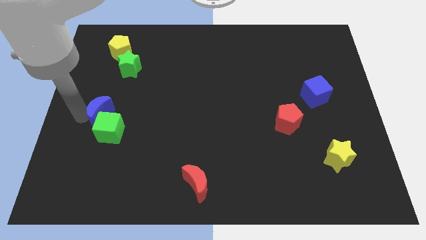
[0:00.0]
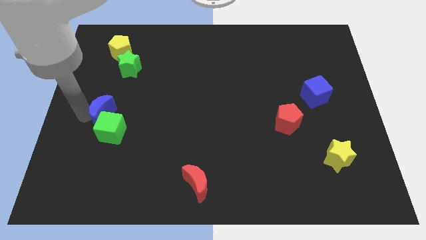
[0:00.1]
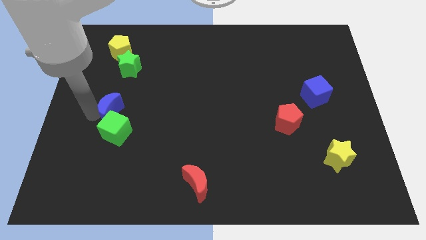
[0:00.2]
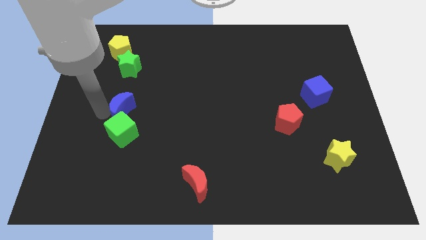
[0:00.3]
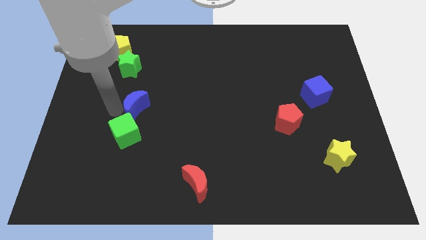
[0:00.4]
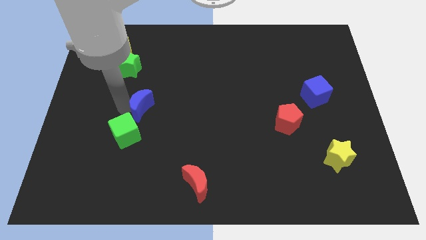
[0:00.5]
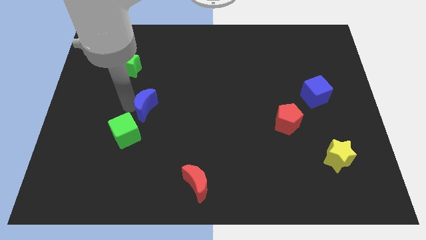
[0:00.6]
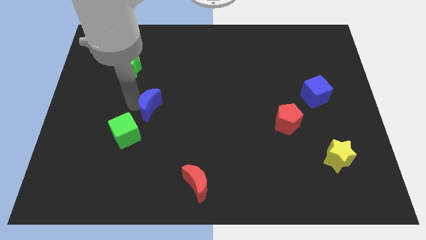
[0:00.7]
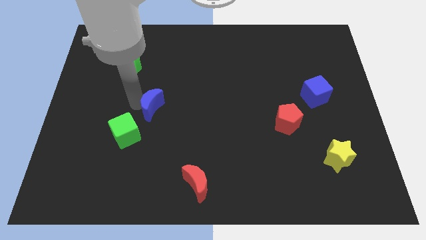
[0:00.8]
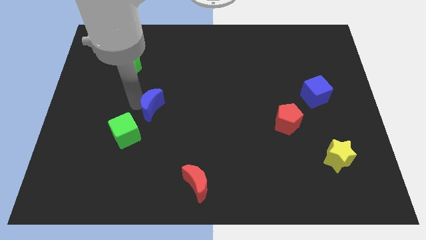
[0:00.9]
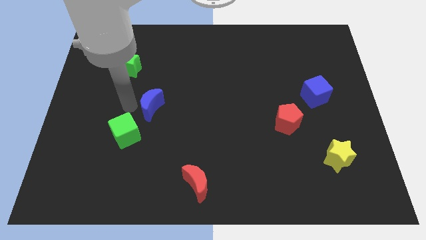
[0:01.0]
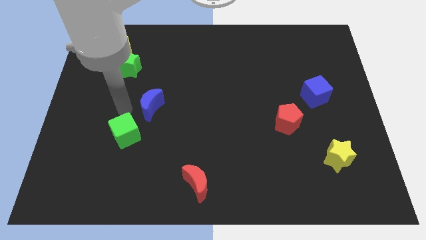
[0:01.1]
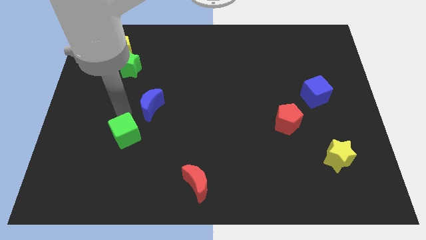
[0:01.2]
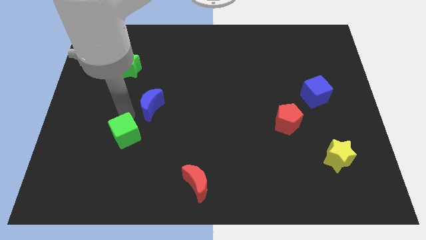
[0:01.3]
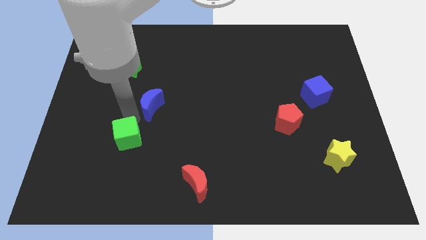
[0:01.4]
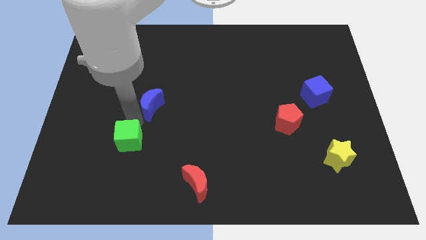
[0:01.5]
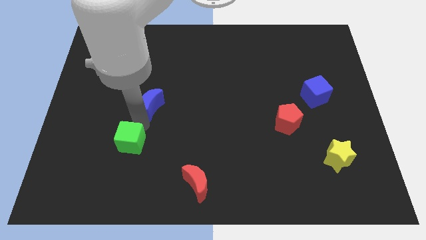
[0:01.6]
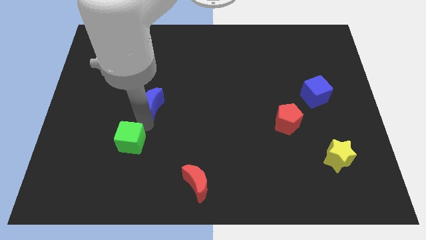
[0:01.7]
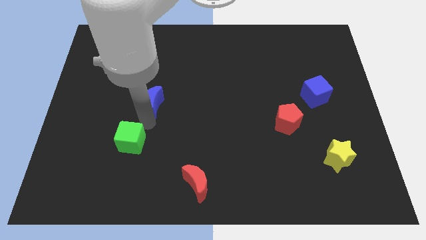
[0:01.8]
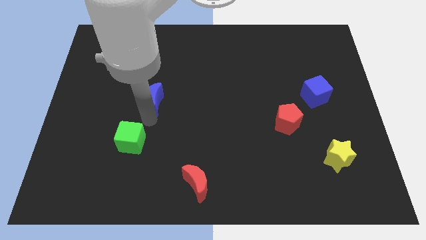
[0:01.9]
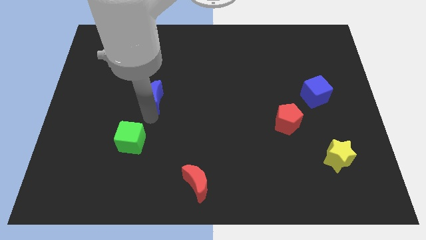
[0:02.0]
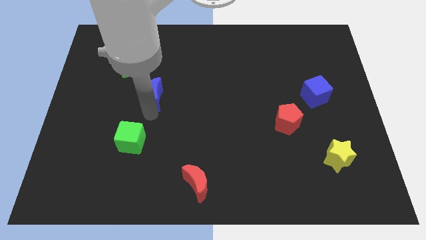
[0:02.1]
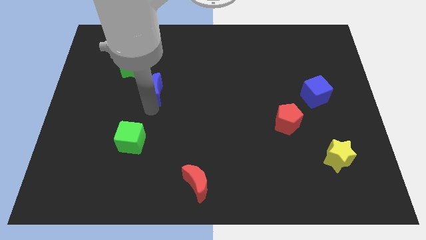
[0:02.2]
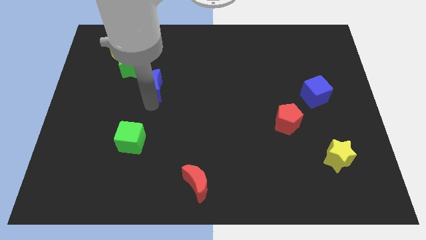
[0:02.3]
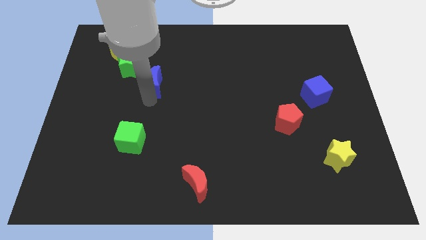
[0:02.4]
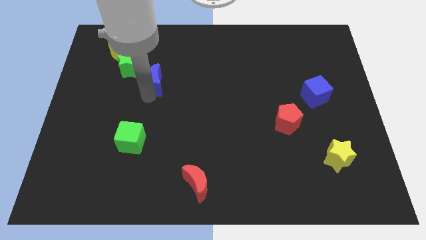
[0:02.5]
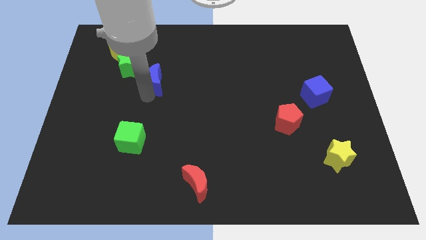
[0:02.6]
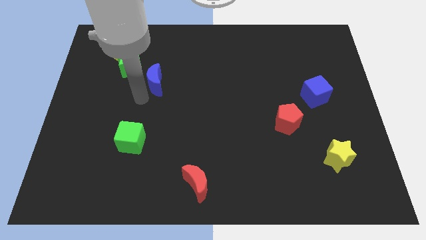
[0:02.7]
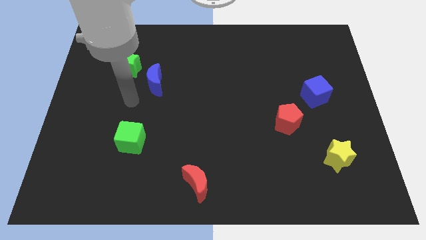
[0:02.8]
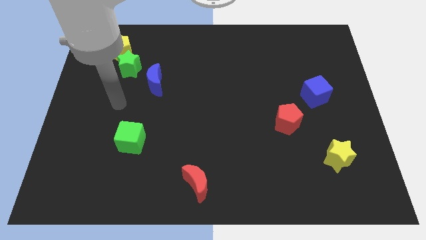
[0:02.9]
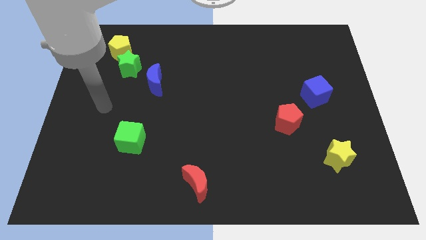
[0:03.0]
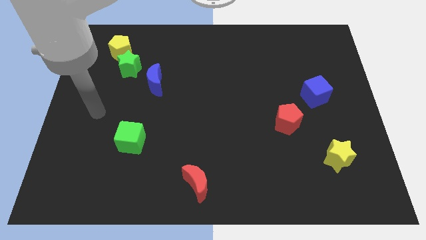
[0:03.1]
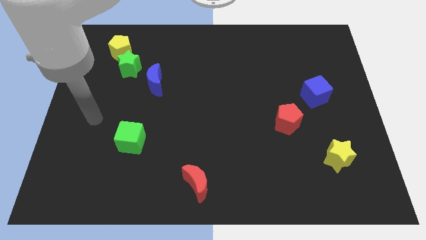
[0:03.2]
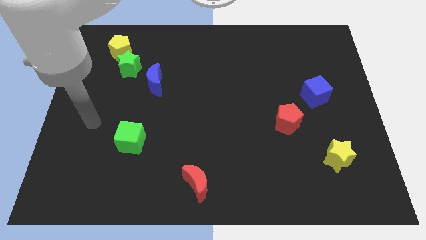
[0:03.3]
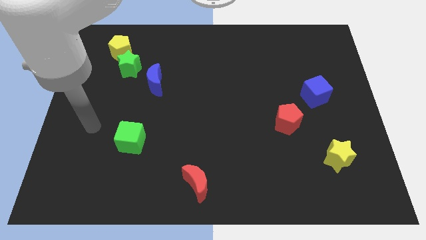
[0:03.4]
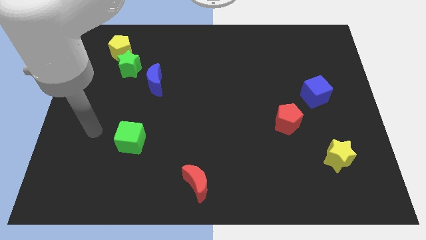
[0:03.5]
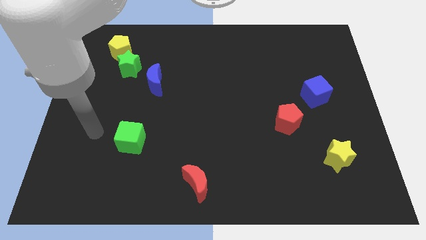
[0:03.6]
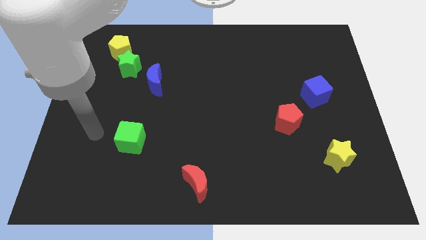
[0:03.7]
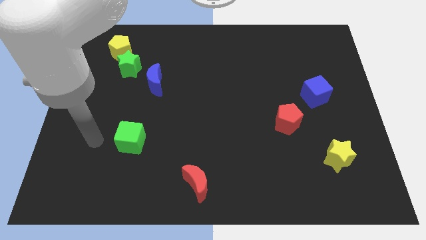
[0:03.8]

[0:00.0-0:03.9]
place the blue moon to the bottom right side of the green star

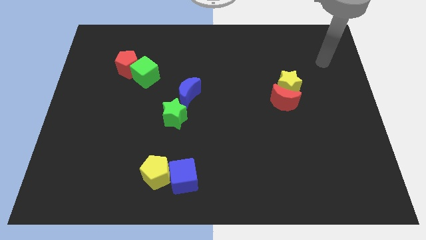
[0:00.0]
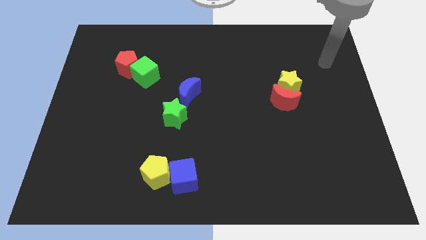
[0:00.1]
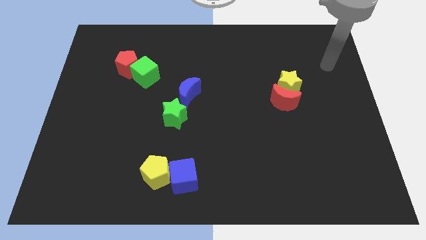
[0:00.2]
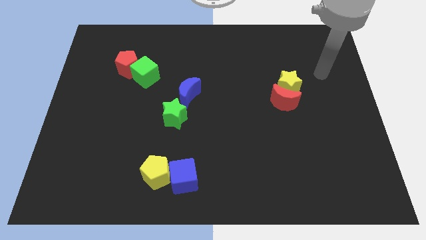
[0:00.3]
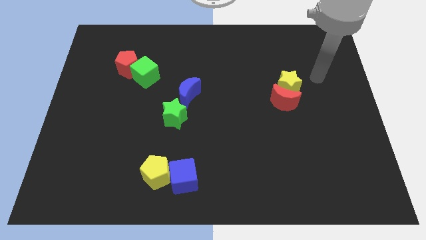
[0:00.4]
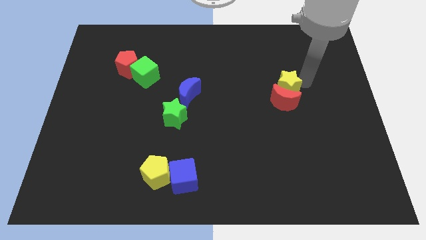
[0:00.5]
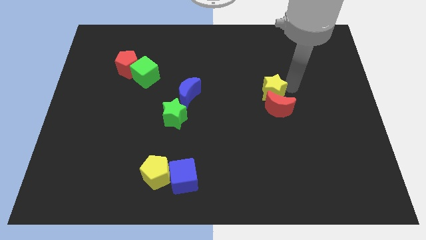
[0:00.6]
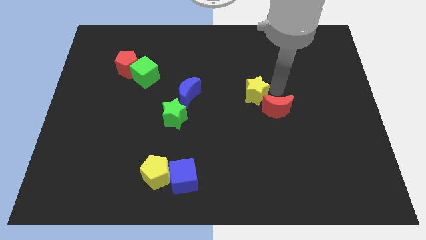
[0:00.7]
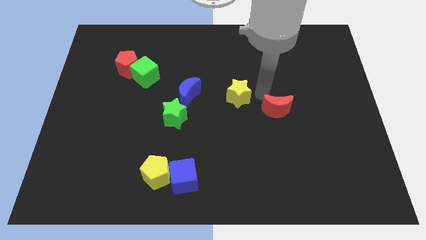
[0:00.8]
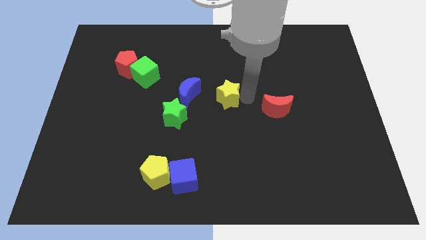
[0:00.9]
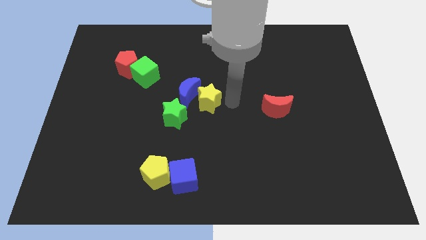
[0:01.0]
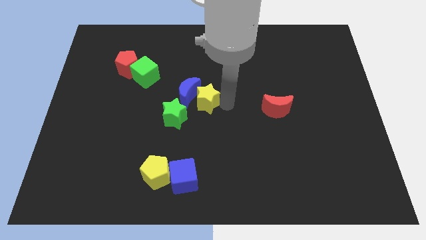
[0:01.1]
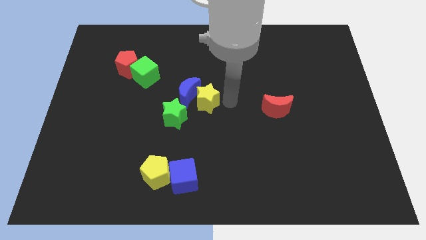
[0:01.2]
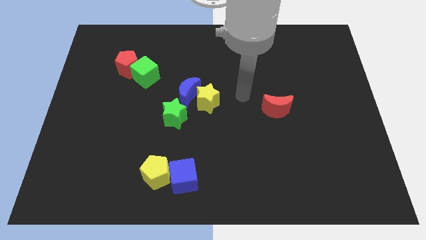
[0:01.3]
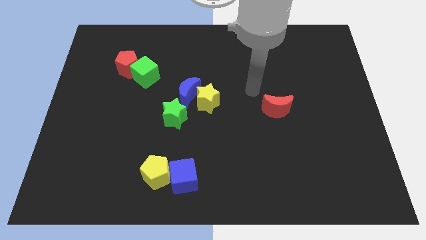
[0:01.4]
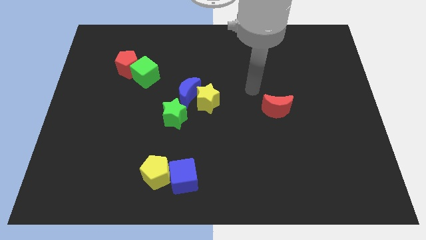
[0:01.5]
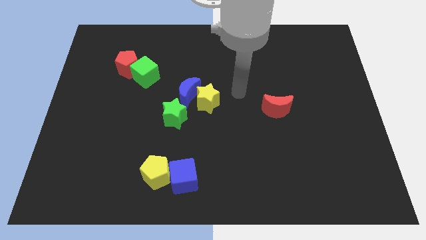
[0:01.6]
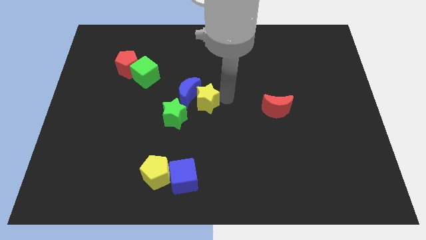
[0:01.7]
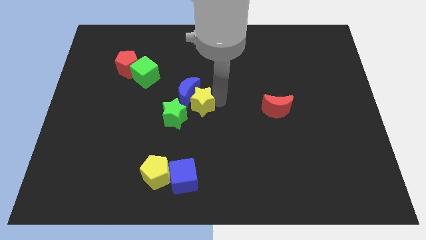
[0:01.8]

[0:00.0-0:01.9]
push the yellow star towards the green star

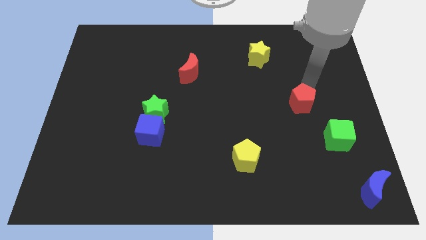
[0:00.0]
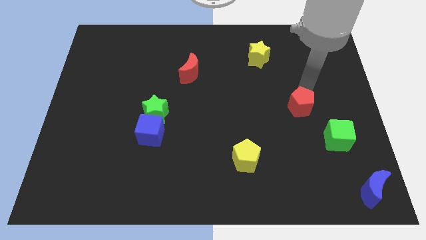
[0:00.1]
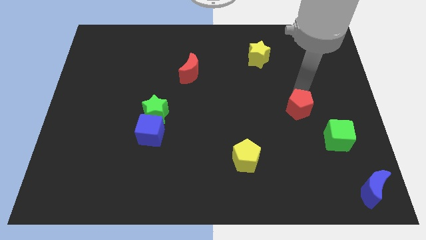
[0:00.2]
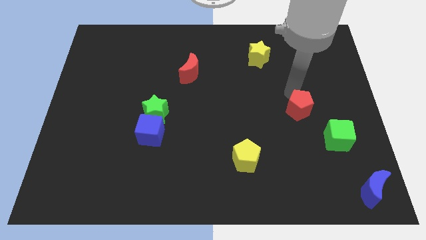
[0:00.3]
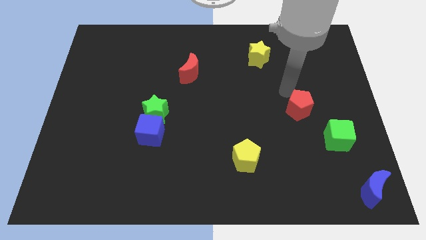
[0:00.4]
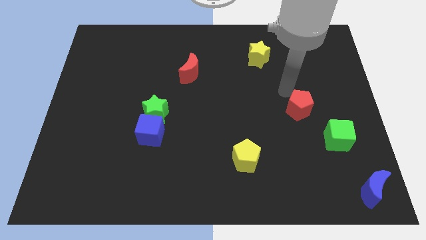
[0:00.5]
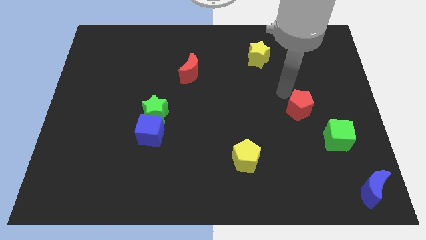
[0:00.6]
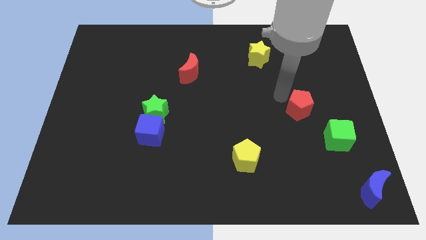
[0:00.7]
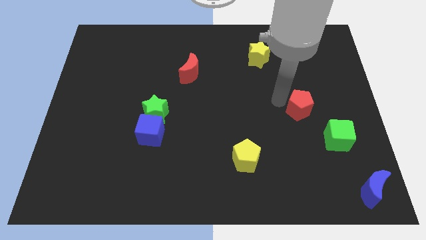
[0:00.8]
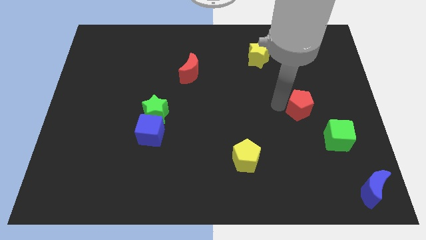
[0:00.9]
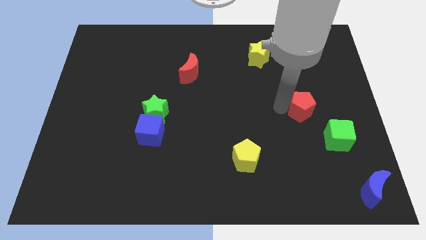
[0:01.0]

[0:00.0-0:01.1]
move red pentagon slightly down

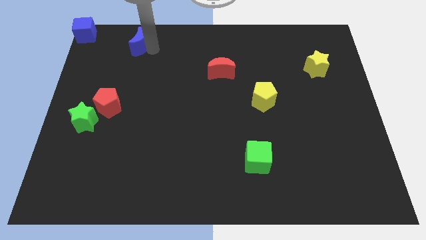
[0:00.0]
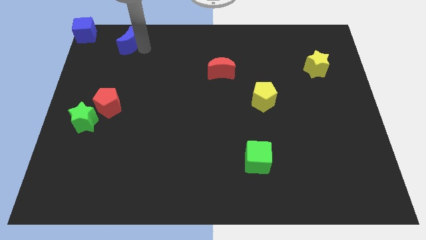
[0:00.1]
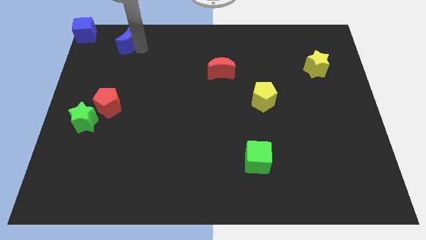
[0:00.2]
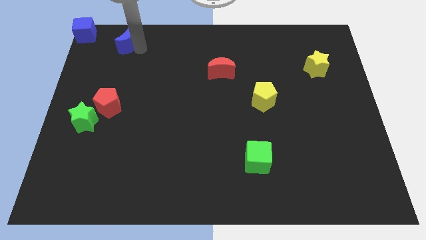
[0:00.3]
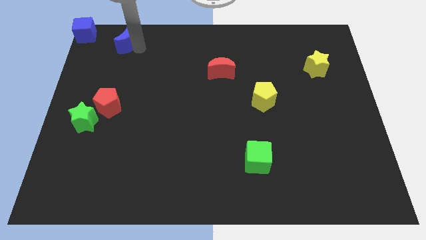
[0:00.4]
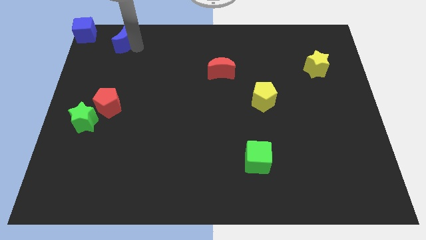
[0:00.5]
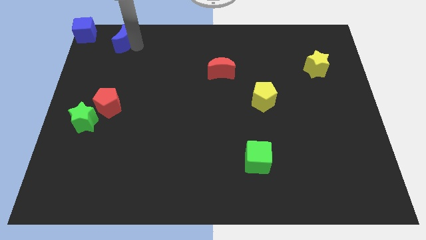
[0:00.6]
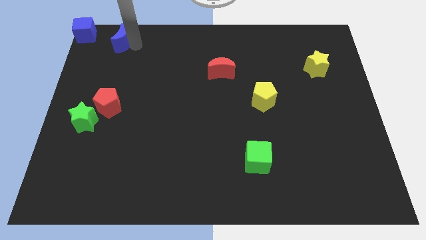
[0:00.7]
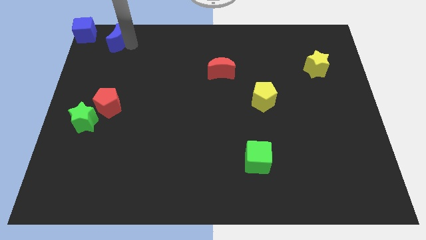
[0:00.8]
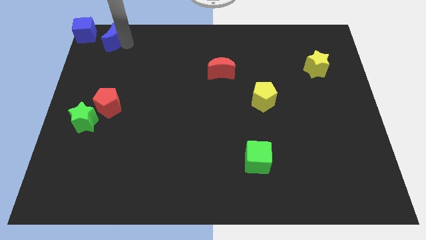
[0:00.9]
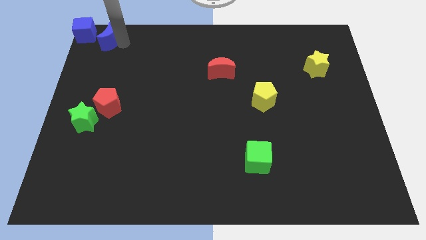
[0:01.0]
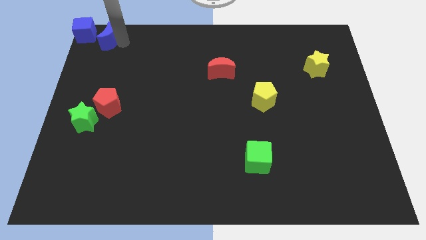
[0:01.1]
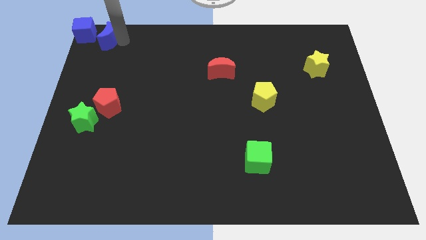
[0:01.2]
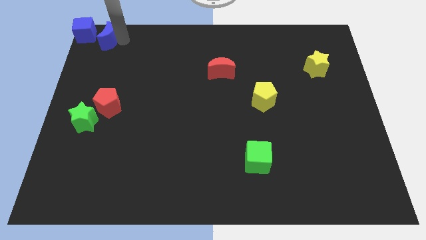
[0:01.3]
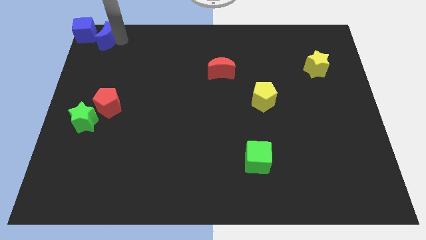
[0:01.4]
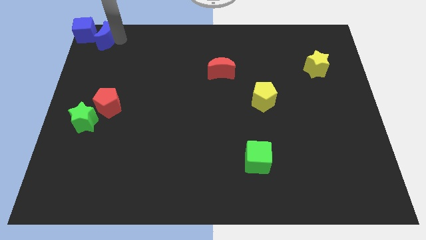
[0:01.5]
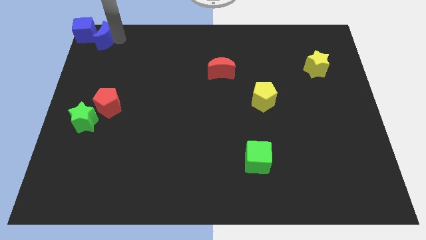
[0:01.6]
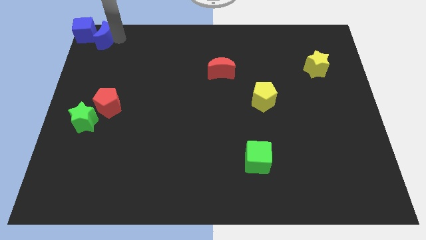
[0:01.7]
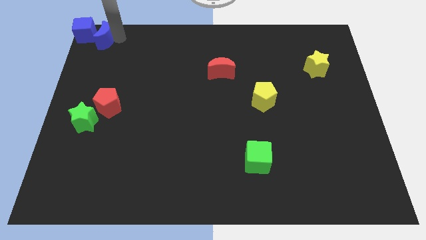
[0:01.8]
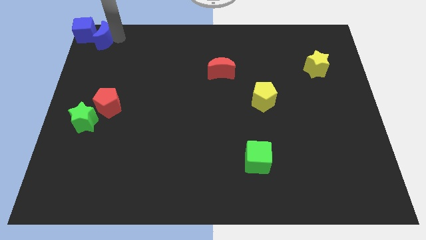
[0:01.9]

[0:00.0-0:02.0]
push the blue crescent into the blue cube
